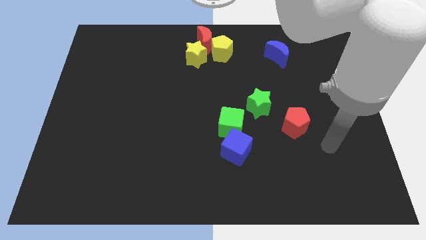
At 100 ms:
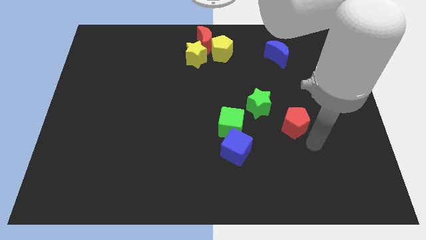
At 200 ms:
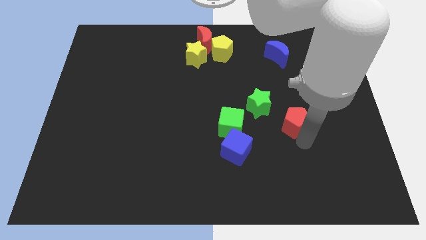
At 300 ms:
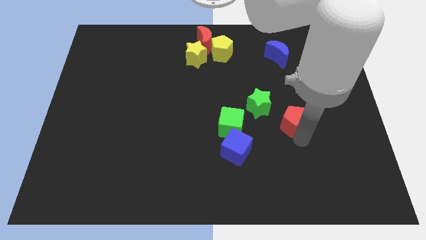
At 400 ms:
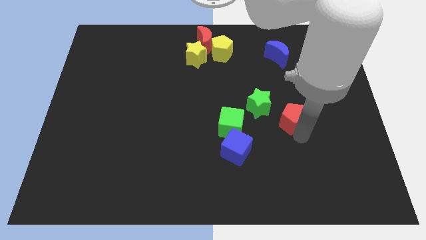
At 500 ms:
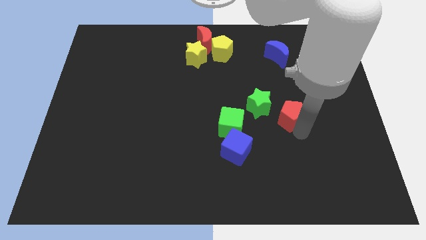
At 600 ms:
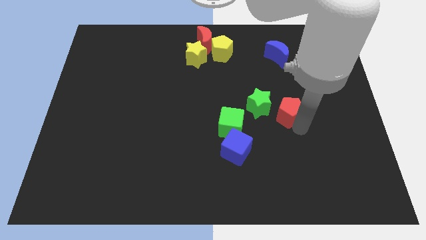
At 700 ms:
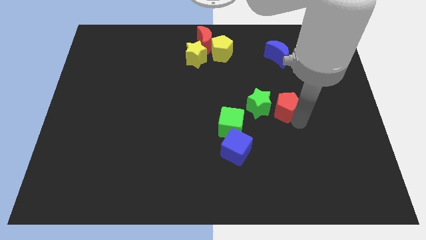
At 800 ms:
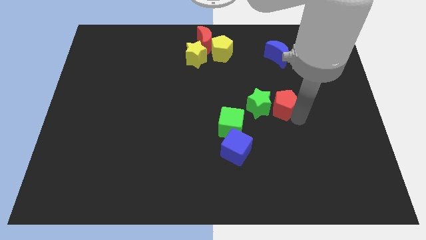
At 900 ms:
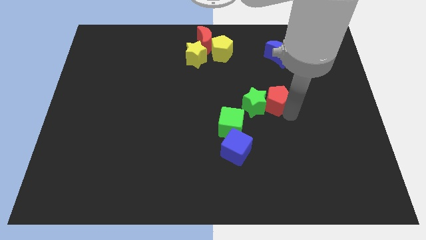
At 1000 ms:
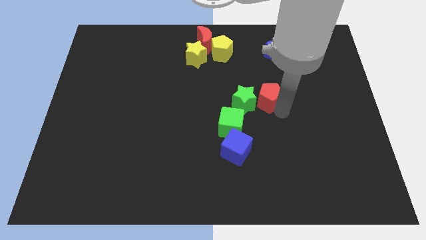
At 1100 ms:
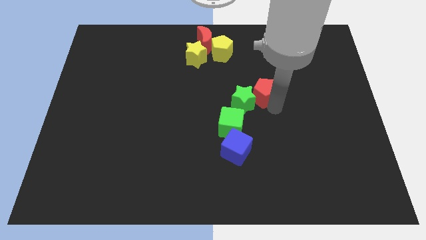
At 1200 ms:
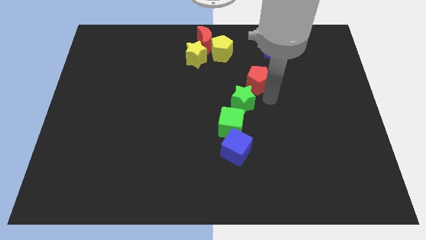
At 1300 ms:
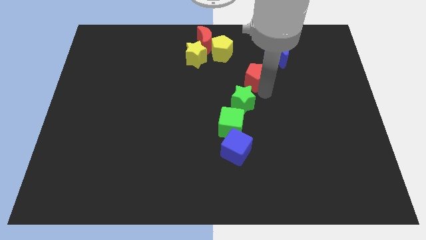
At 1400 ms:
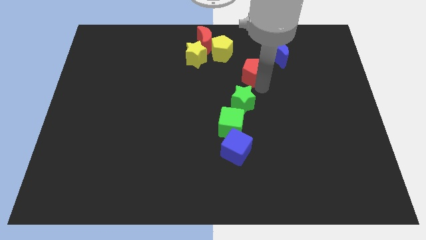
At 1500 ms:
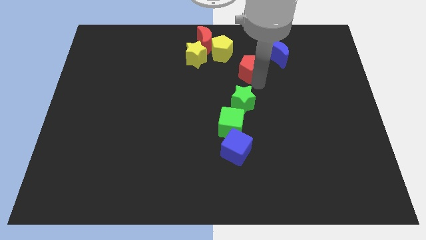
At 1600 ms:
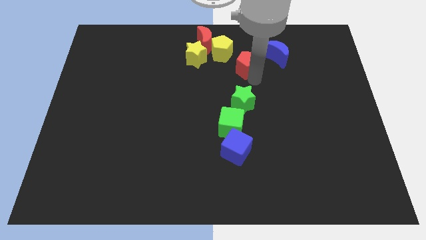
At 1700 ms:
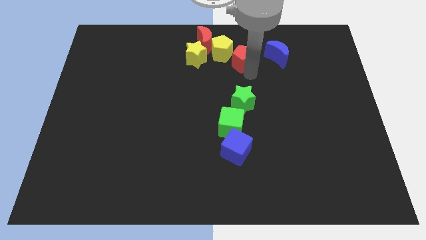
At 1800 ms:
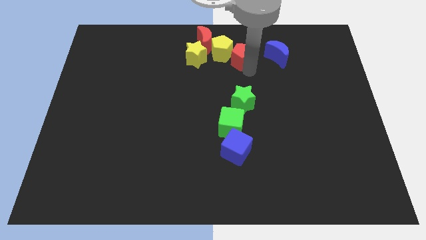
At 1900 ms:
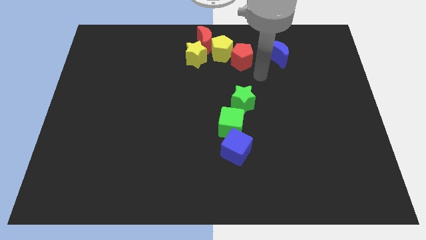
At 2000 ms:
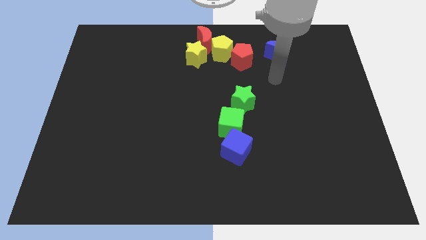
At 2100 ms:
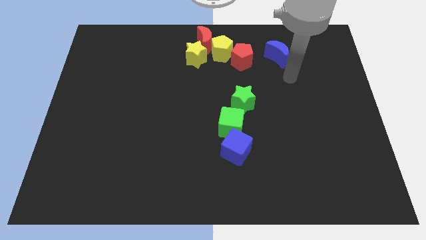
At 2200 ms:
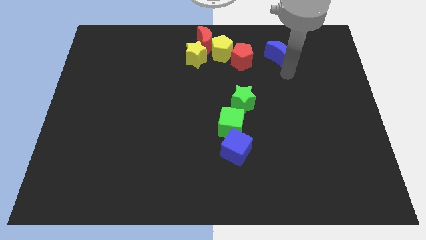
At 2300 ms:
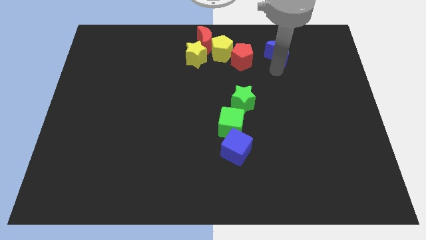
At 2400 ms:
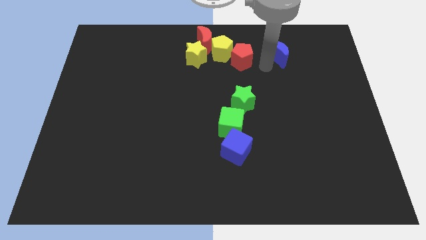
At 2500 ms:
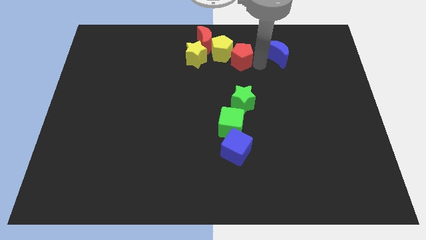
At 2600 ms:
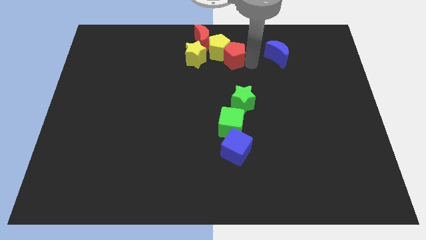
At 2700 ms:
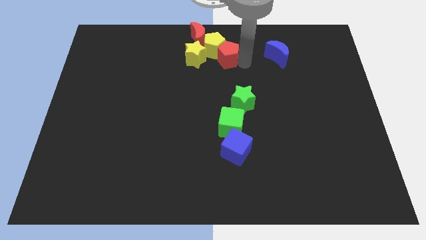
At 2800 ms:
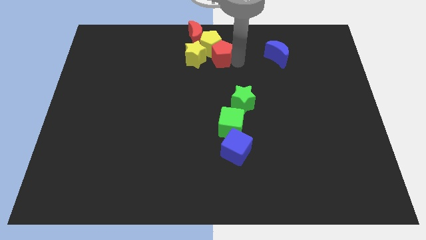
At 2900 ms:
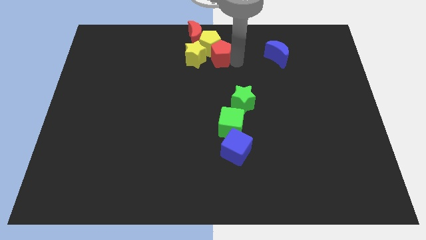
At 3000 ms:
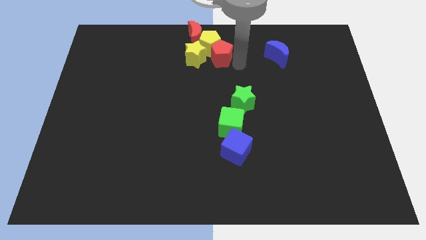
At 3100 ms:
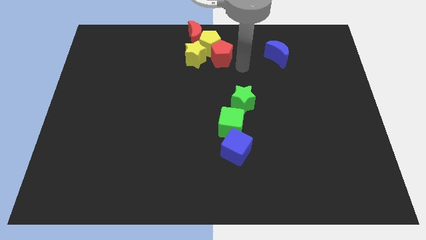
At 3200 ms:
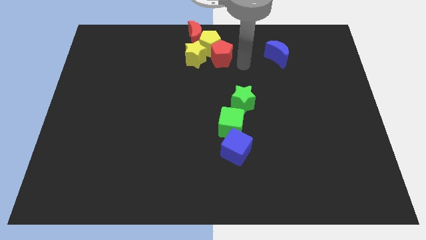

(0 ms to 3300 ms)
push the red pentagon into the group of blocks

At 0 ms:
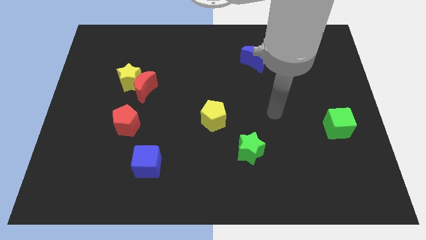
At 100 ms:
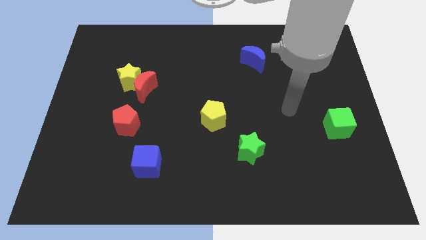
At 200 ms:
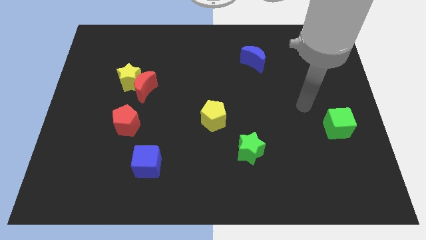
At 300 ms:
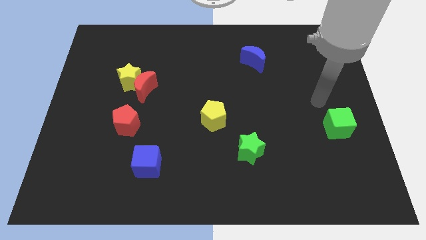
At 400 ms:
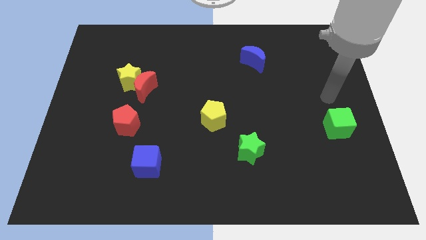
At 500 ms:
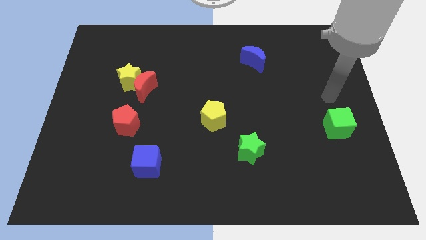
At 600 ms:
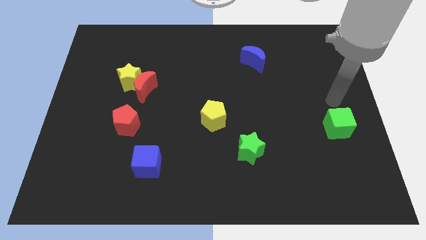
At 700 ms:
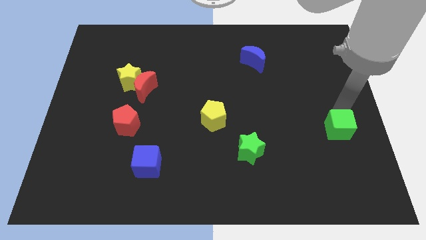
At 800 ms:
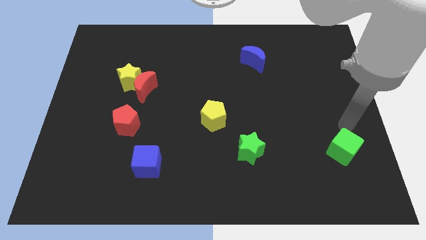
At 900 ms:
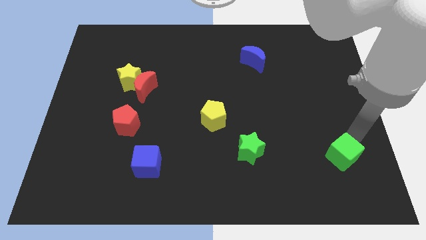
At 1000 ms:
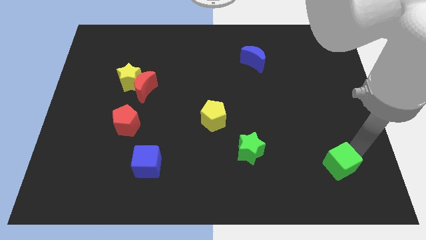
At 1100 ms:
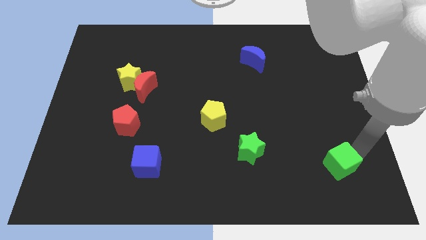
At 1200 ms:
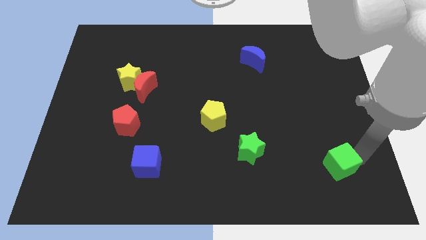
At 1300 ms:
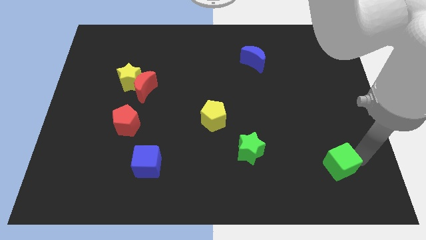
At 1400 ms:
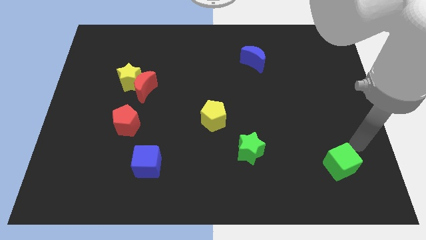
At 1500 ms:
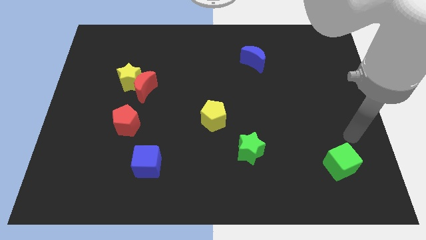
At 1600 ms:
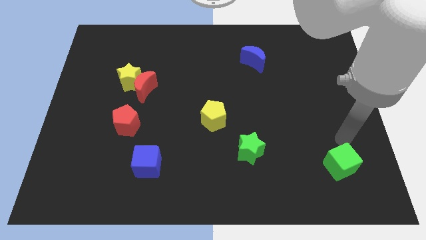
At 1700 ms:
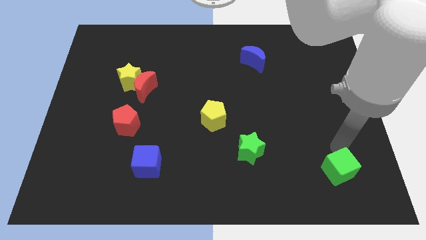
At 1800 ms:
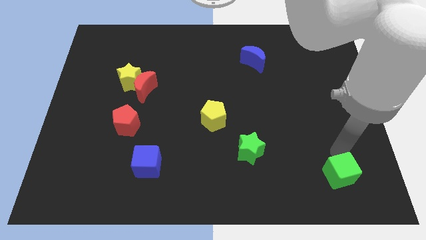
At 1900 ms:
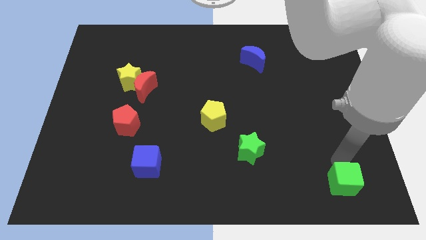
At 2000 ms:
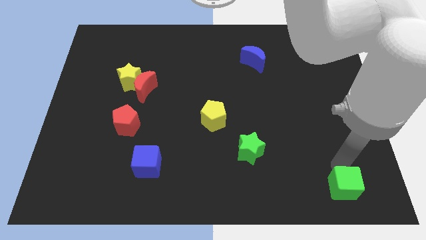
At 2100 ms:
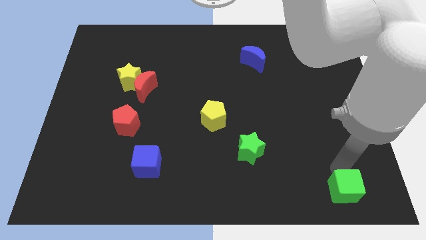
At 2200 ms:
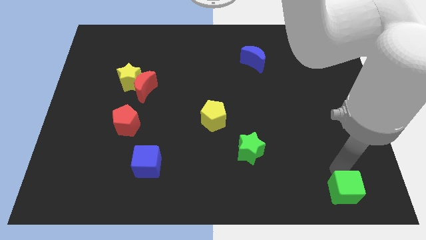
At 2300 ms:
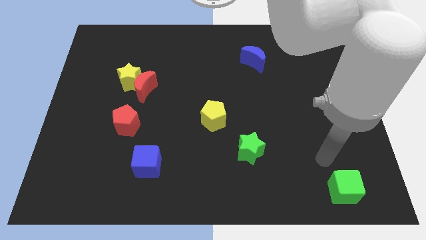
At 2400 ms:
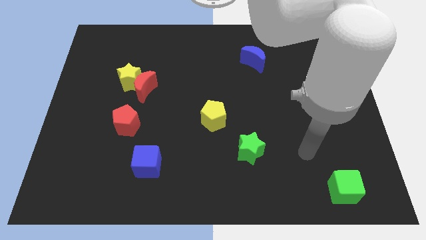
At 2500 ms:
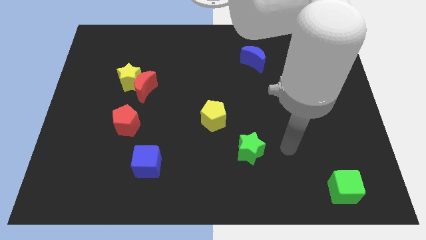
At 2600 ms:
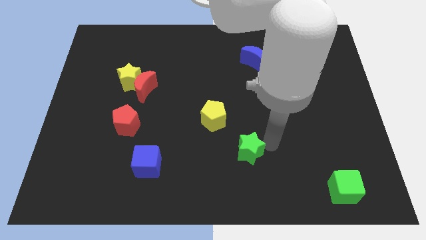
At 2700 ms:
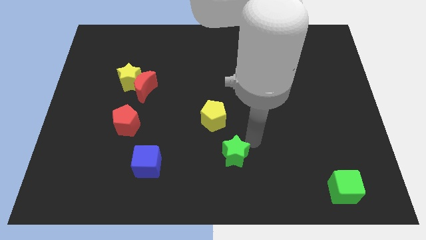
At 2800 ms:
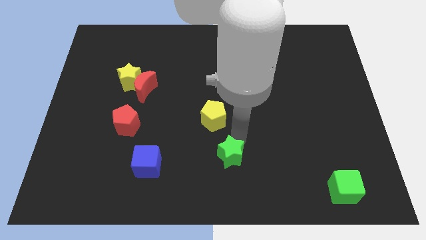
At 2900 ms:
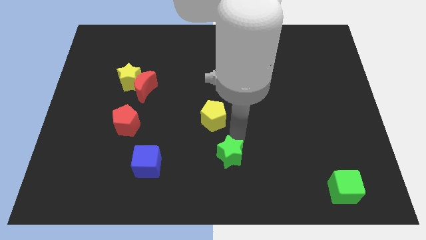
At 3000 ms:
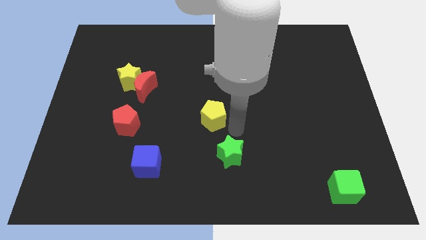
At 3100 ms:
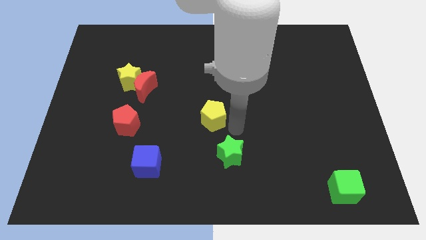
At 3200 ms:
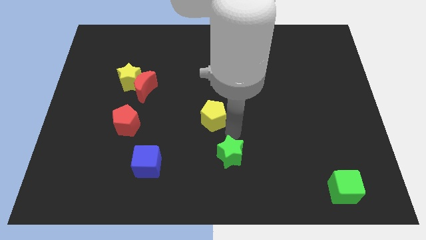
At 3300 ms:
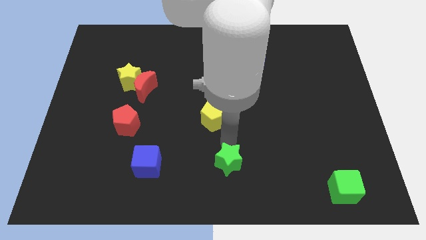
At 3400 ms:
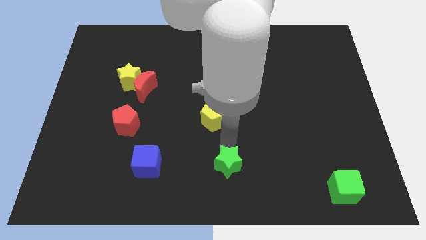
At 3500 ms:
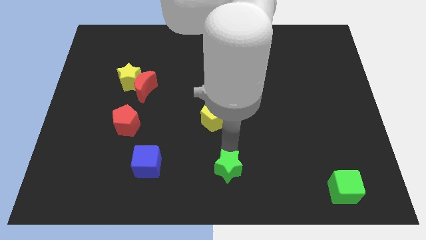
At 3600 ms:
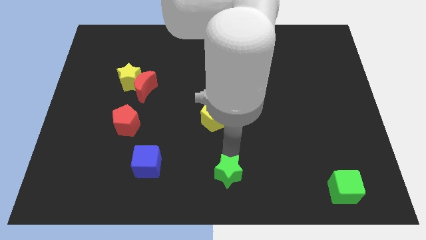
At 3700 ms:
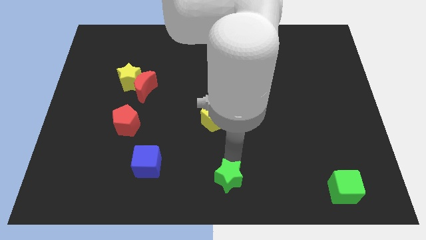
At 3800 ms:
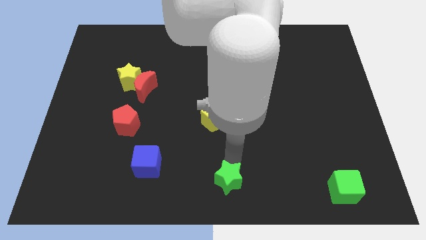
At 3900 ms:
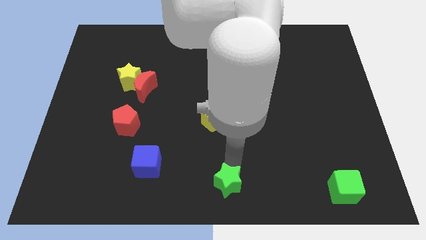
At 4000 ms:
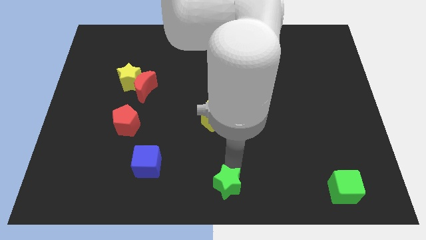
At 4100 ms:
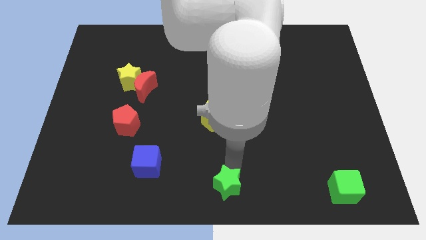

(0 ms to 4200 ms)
move green cube and the green star parallel to each other

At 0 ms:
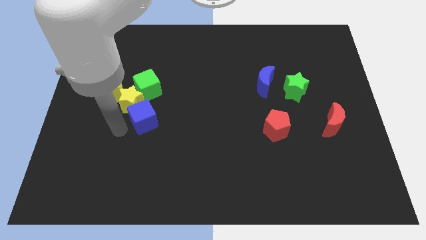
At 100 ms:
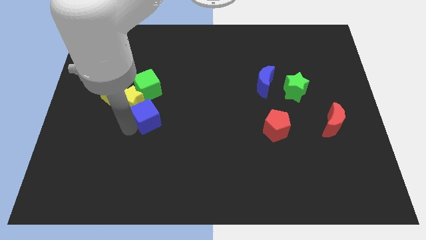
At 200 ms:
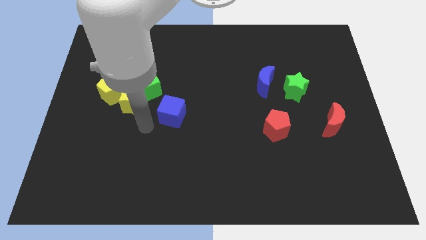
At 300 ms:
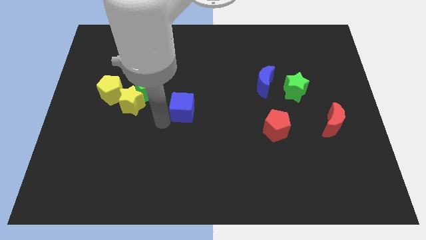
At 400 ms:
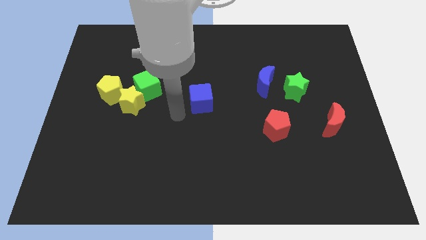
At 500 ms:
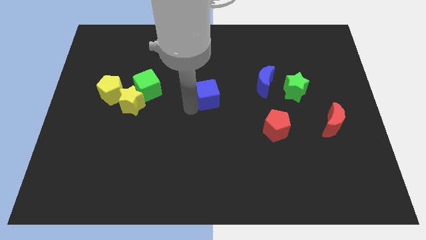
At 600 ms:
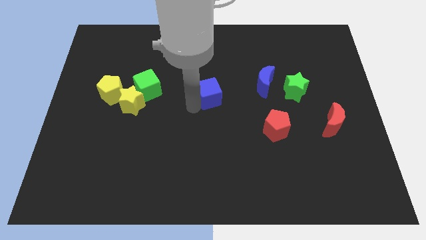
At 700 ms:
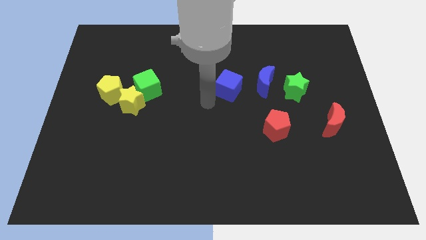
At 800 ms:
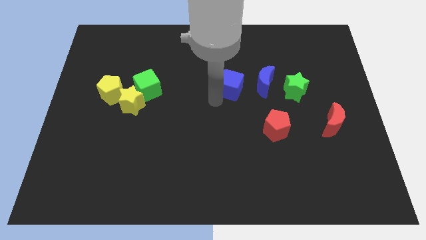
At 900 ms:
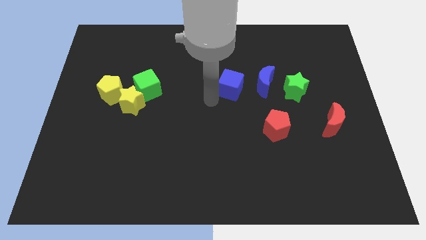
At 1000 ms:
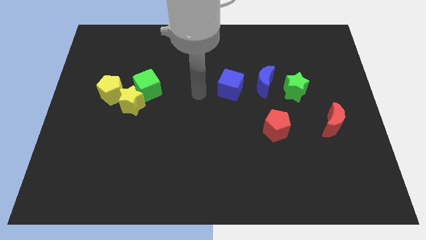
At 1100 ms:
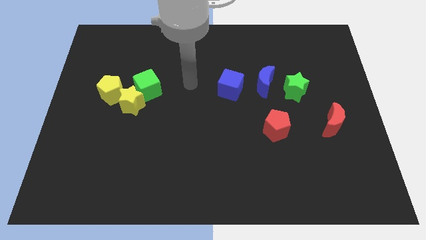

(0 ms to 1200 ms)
separate blue cube from the yellow star

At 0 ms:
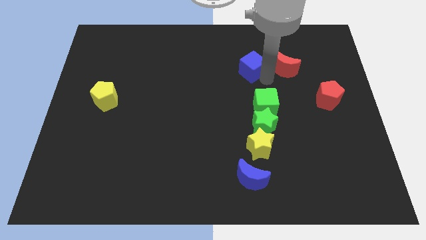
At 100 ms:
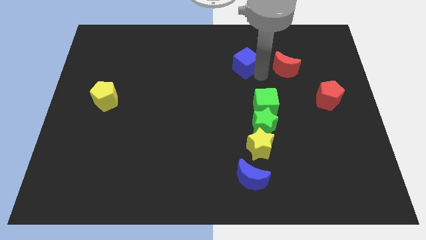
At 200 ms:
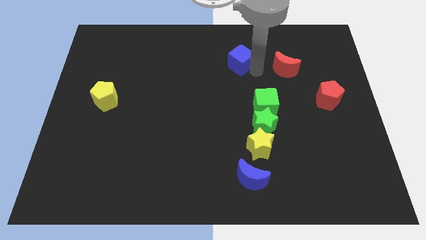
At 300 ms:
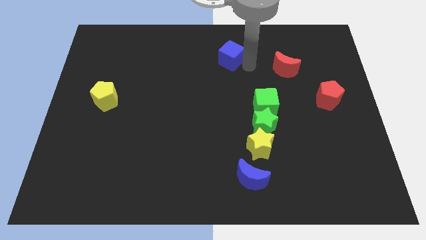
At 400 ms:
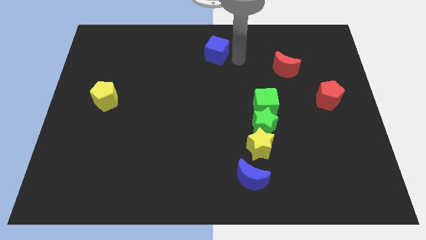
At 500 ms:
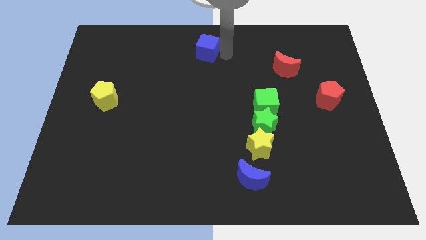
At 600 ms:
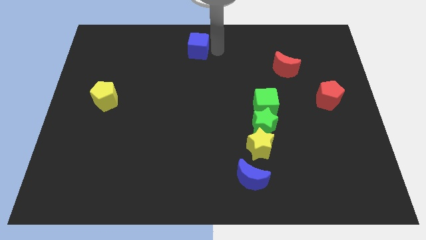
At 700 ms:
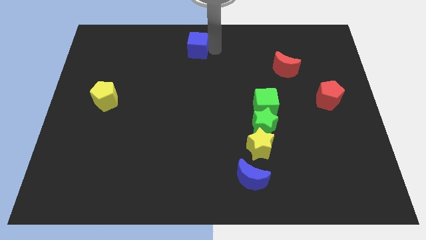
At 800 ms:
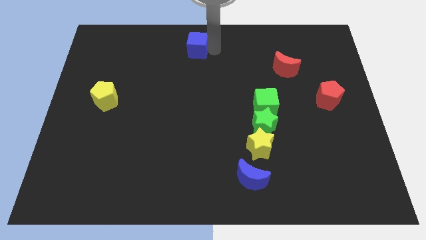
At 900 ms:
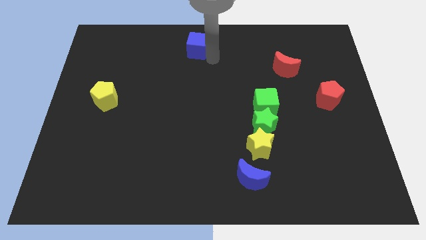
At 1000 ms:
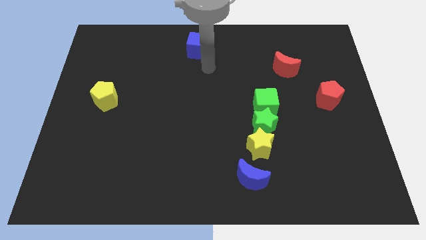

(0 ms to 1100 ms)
move blue cube to center top
